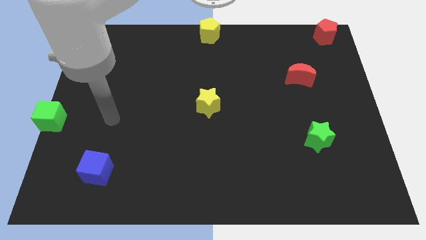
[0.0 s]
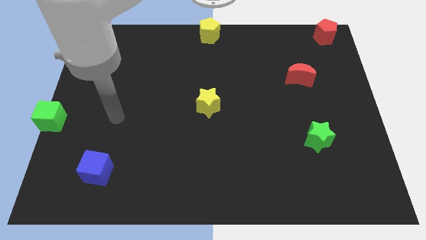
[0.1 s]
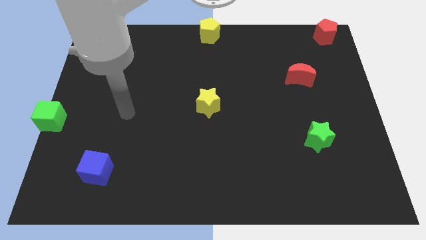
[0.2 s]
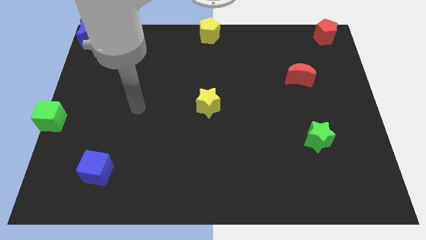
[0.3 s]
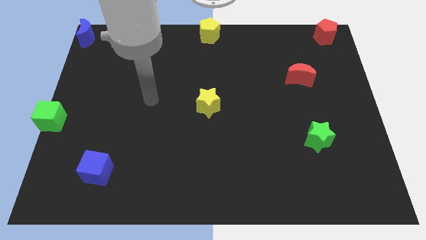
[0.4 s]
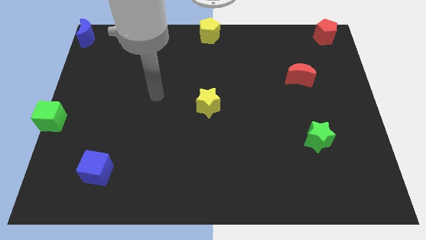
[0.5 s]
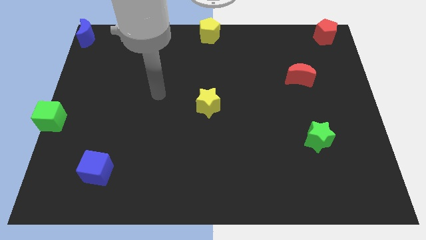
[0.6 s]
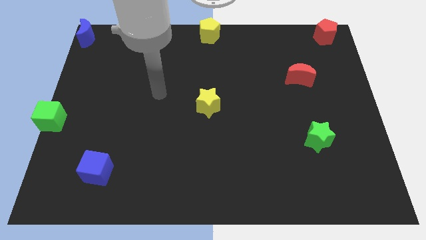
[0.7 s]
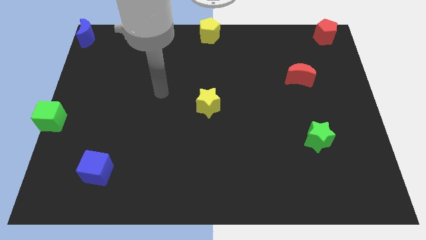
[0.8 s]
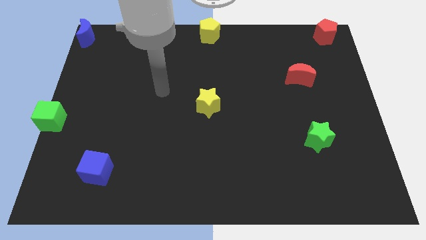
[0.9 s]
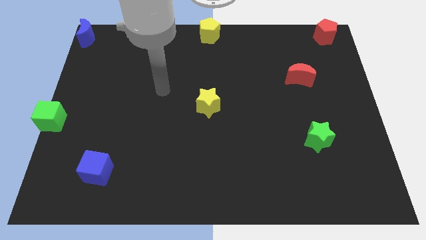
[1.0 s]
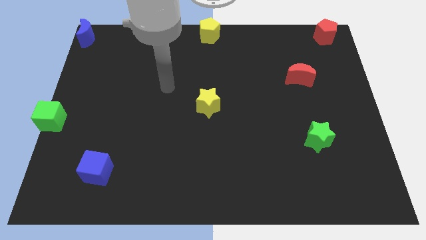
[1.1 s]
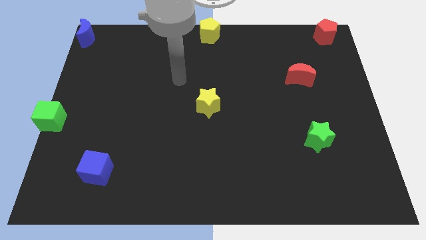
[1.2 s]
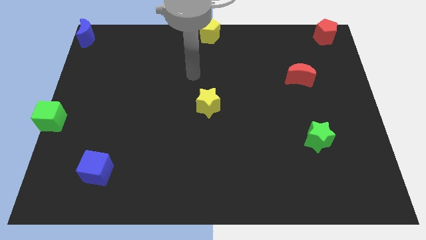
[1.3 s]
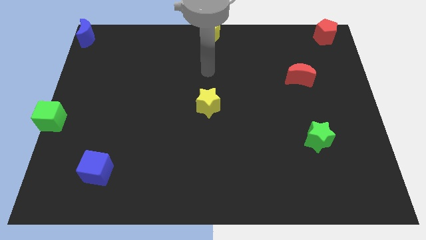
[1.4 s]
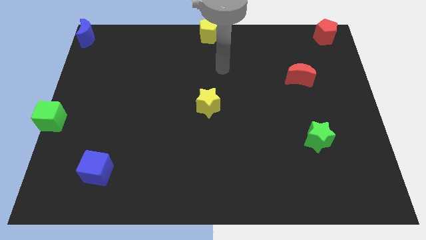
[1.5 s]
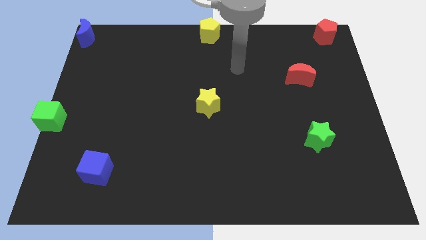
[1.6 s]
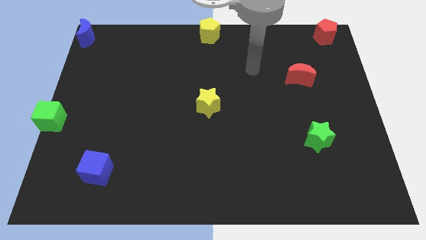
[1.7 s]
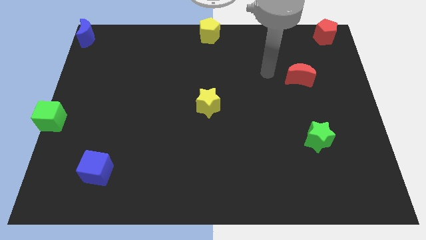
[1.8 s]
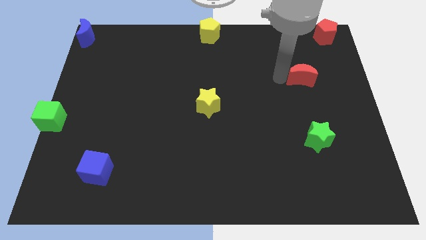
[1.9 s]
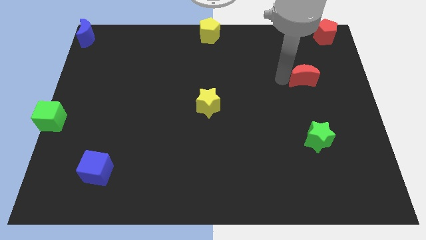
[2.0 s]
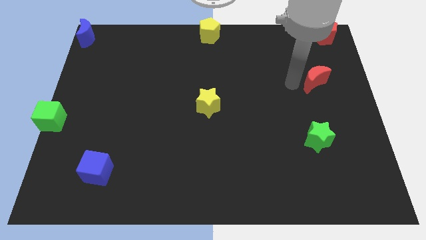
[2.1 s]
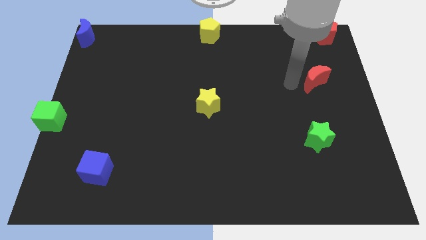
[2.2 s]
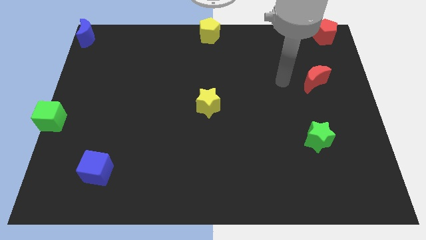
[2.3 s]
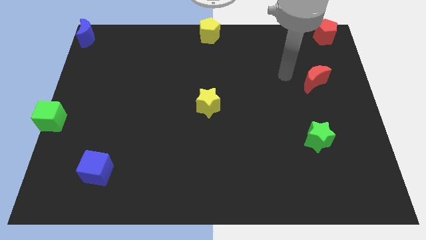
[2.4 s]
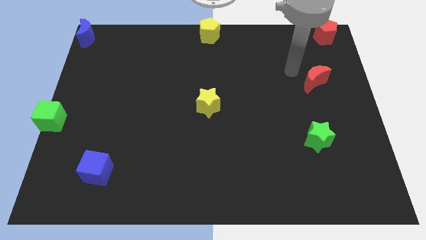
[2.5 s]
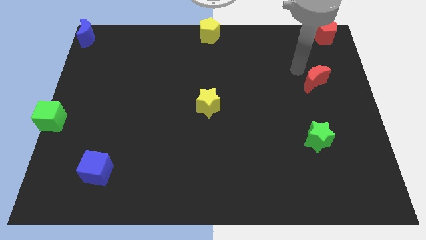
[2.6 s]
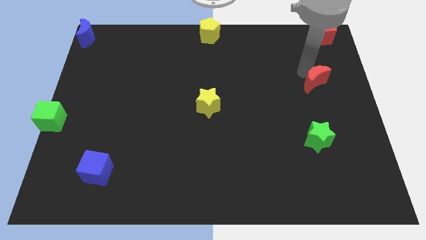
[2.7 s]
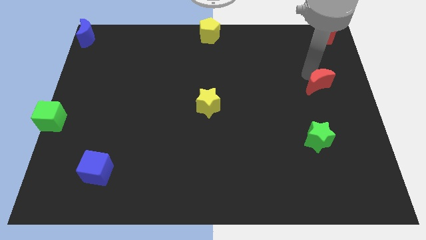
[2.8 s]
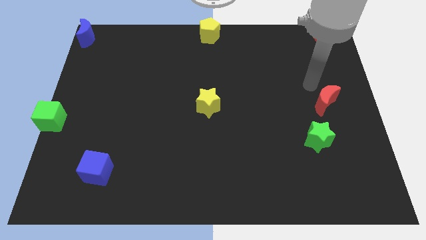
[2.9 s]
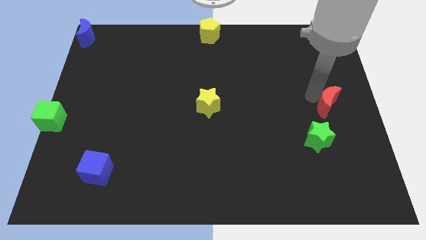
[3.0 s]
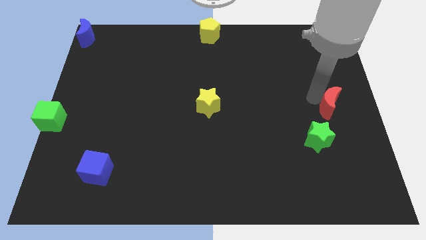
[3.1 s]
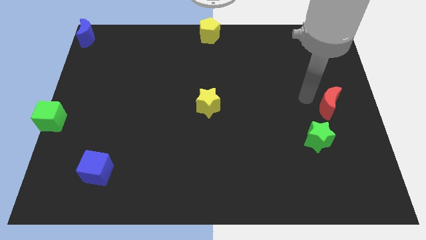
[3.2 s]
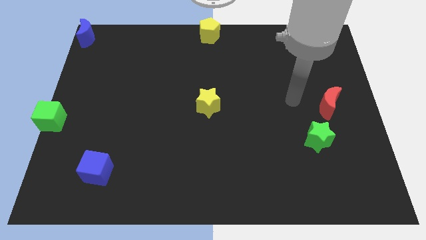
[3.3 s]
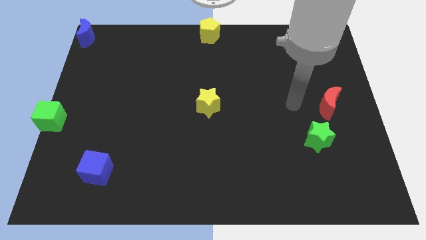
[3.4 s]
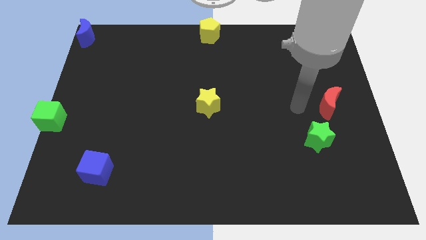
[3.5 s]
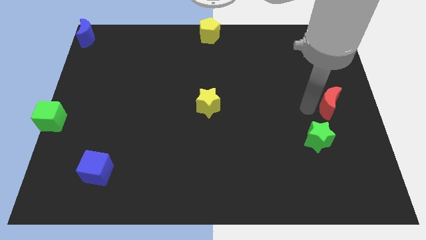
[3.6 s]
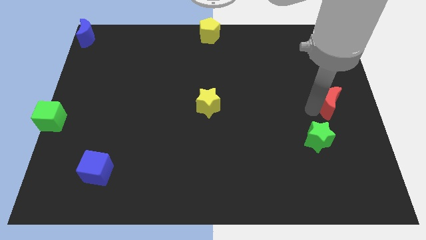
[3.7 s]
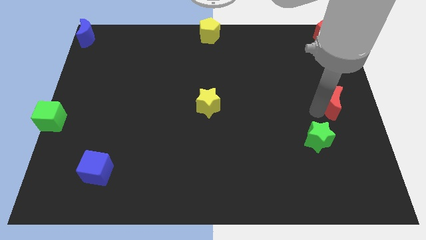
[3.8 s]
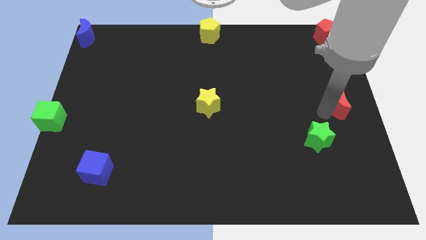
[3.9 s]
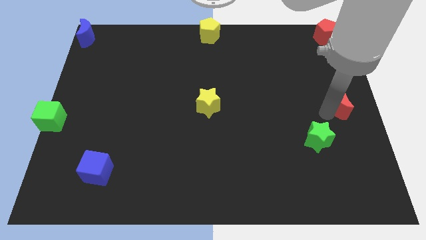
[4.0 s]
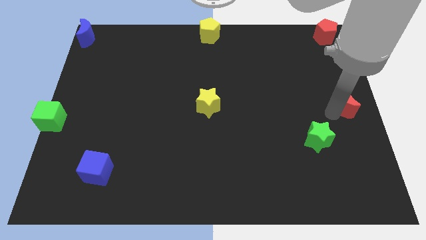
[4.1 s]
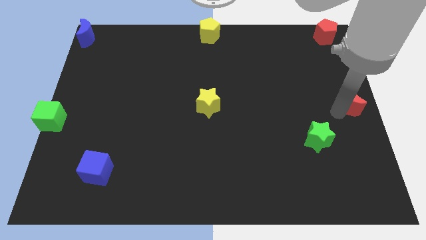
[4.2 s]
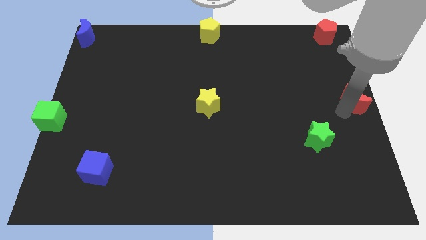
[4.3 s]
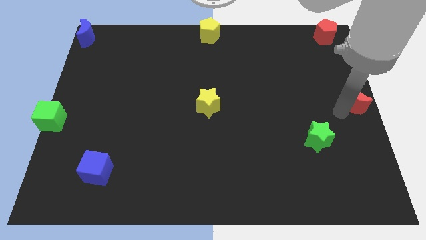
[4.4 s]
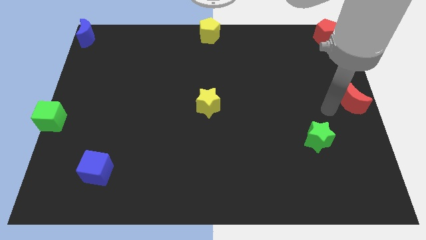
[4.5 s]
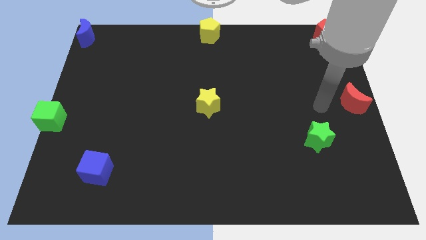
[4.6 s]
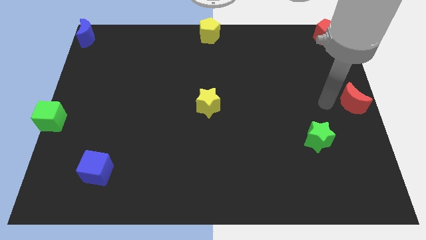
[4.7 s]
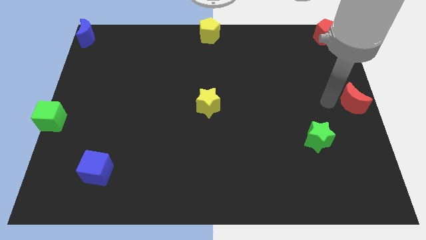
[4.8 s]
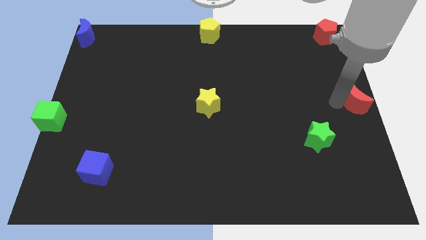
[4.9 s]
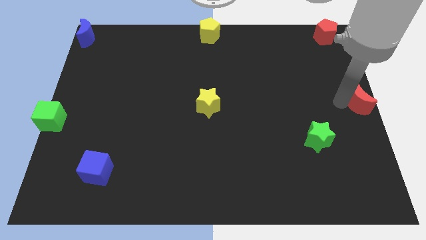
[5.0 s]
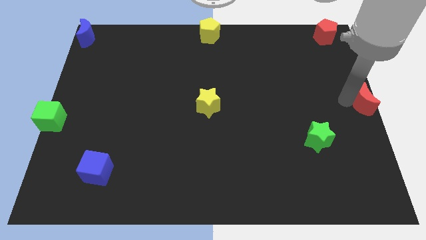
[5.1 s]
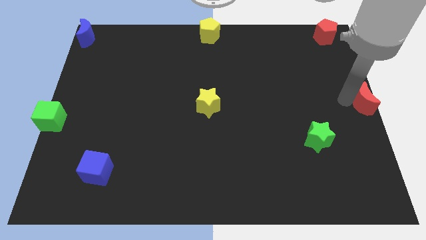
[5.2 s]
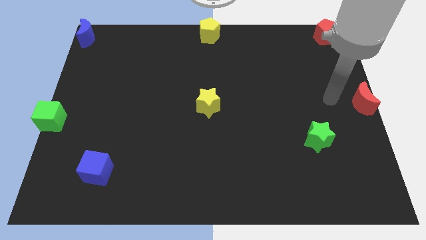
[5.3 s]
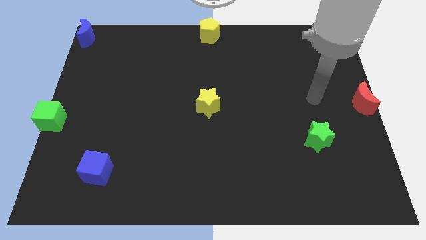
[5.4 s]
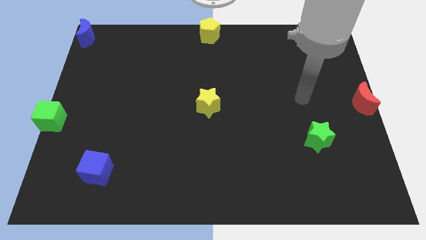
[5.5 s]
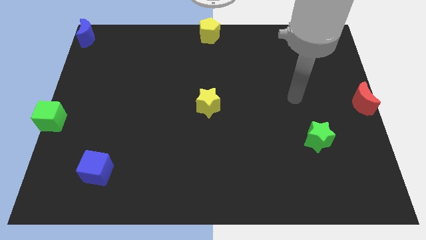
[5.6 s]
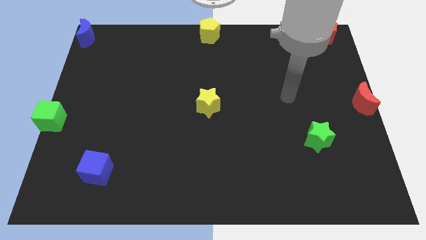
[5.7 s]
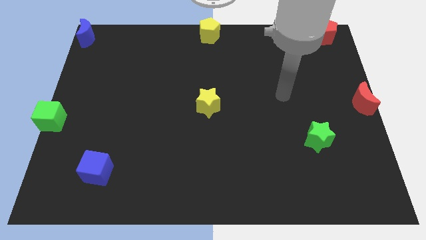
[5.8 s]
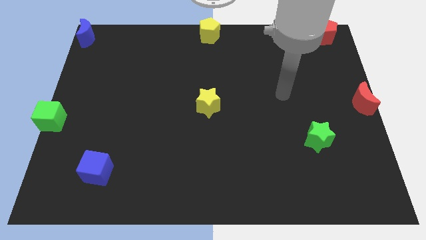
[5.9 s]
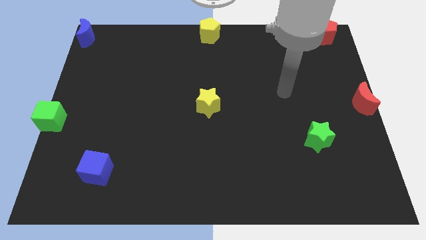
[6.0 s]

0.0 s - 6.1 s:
slide the red moon to the right center of the board

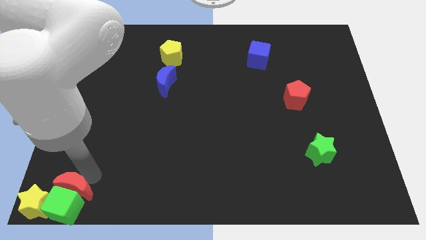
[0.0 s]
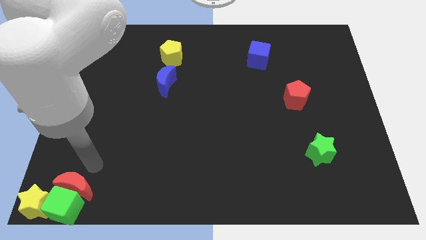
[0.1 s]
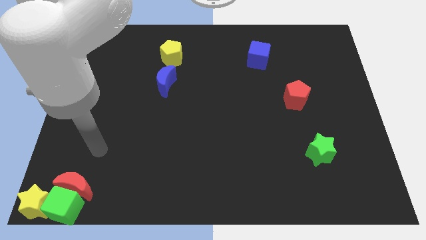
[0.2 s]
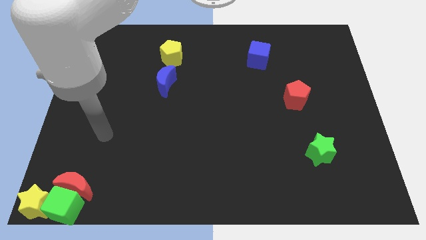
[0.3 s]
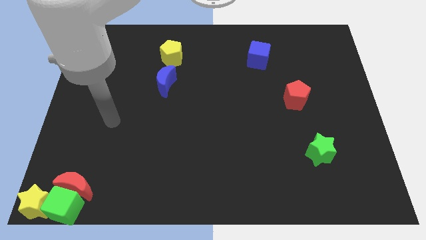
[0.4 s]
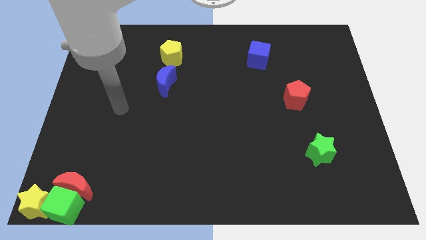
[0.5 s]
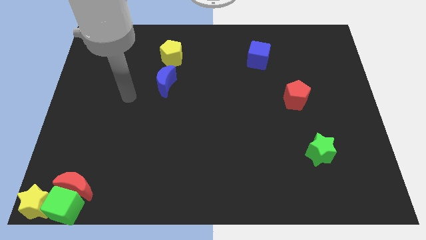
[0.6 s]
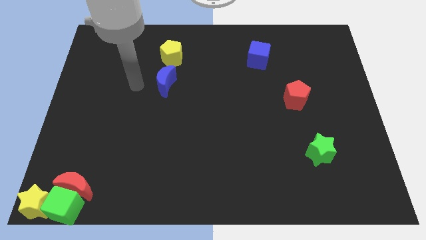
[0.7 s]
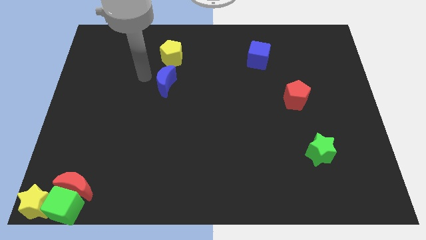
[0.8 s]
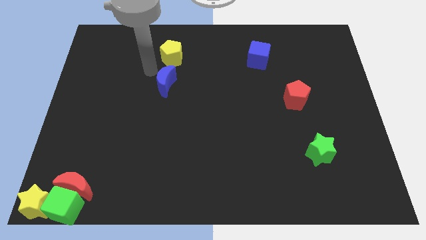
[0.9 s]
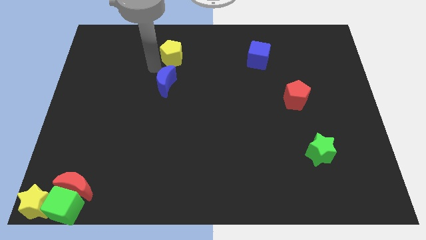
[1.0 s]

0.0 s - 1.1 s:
point your arm left to blue moon

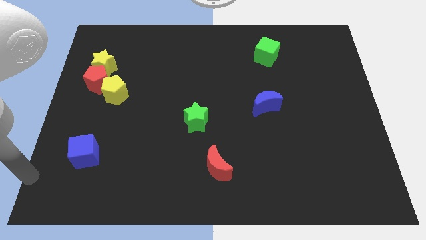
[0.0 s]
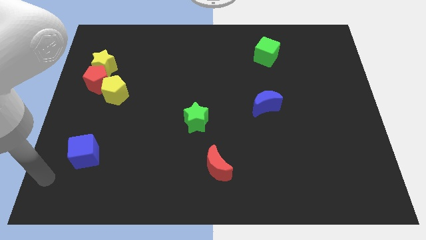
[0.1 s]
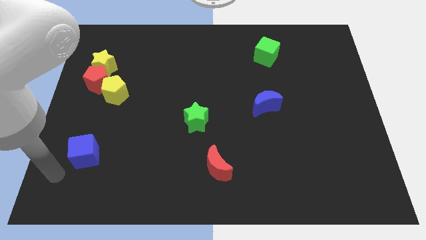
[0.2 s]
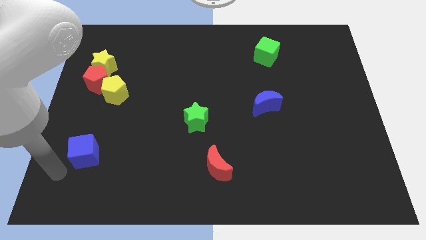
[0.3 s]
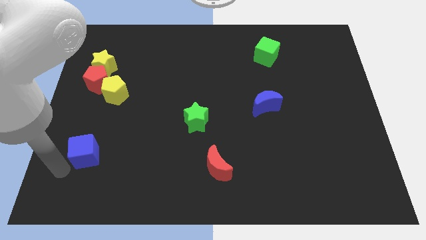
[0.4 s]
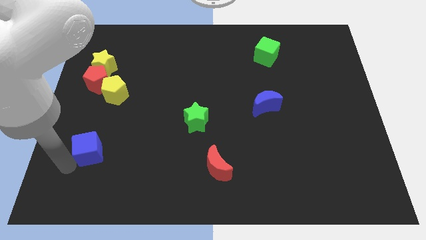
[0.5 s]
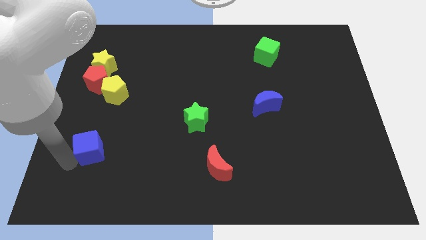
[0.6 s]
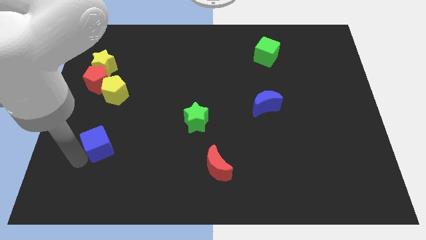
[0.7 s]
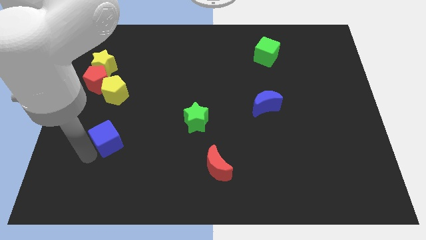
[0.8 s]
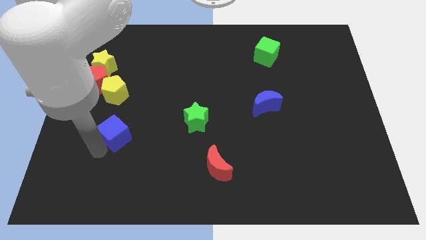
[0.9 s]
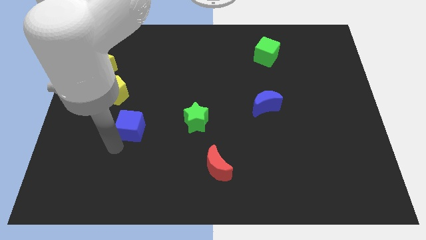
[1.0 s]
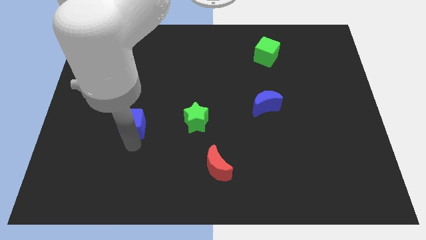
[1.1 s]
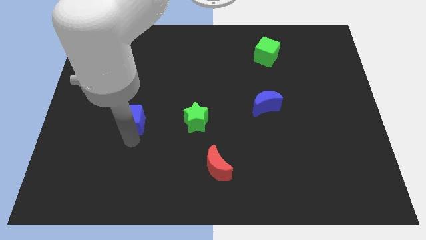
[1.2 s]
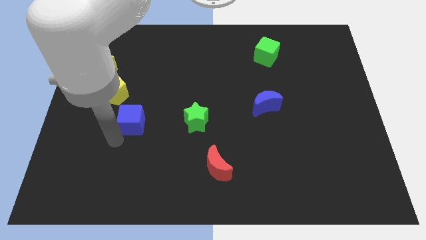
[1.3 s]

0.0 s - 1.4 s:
place blue cube below the yellow pentagon

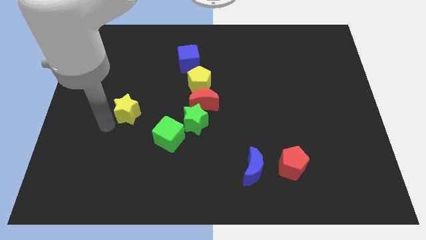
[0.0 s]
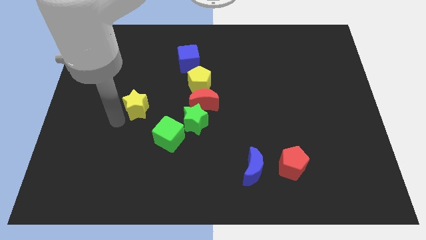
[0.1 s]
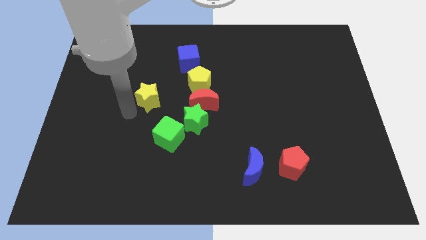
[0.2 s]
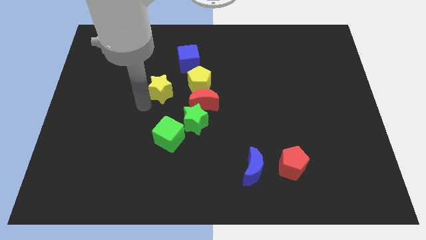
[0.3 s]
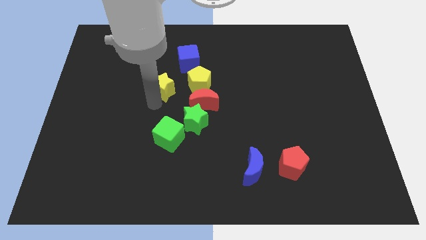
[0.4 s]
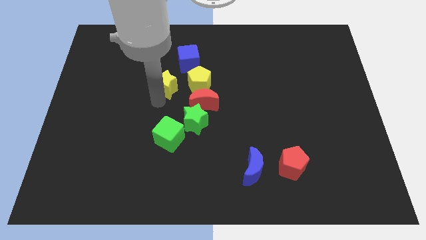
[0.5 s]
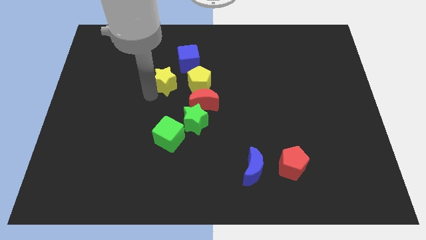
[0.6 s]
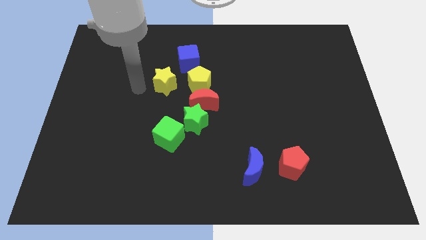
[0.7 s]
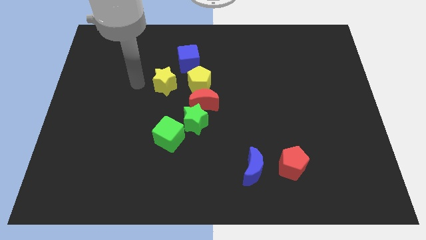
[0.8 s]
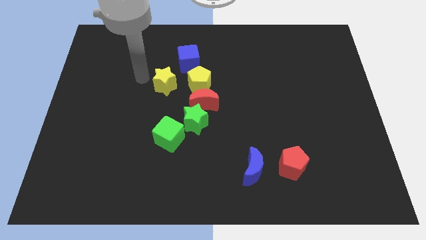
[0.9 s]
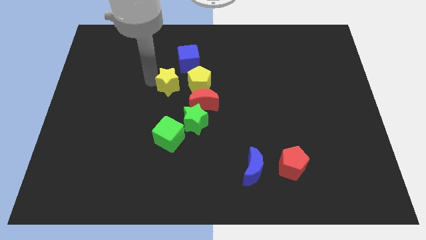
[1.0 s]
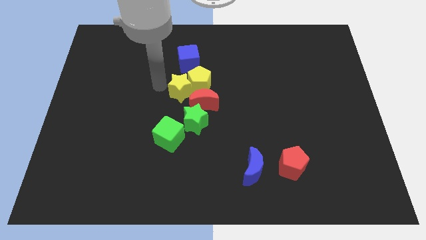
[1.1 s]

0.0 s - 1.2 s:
drag the yellow star and place it close to the yellow pentagon
